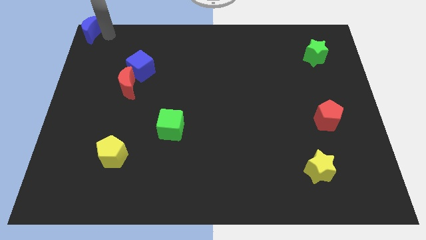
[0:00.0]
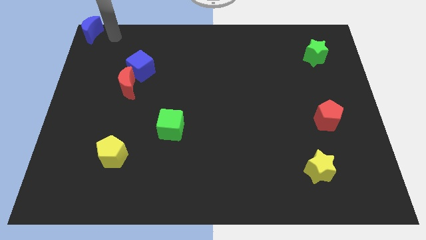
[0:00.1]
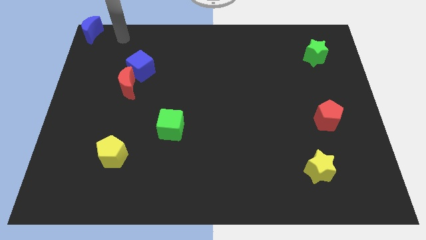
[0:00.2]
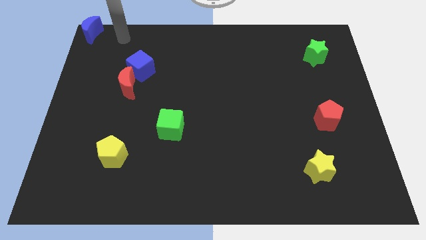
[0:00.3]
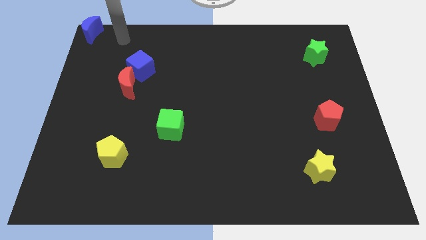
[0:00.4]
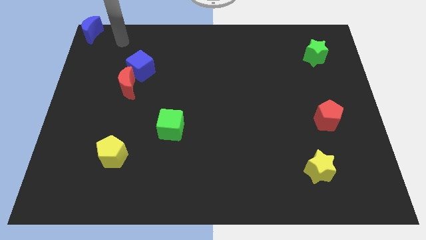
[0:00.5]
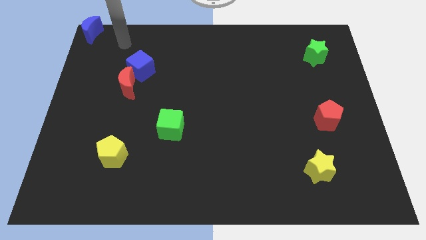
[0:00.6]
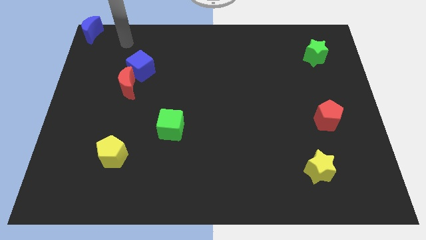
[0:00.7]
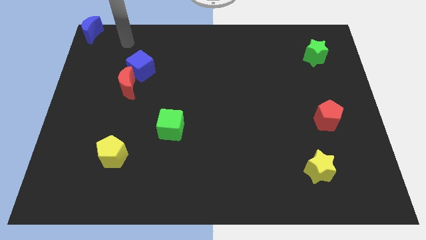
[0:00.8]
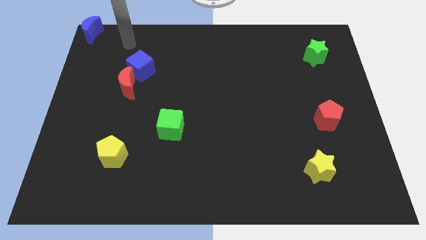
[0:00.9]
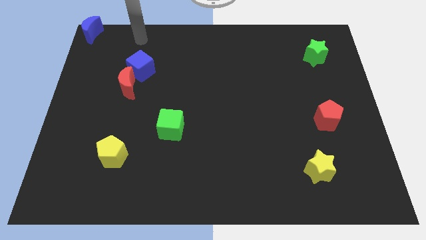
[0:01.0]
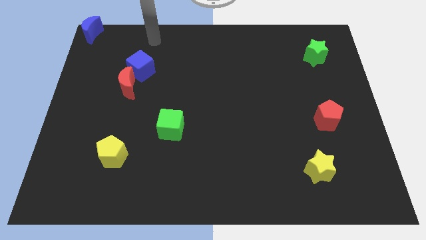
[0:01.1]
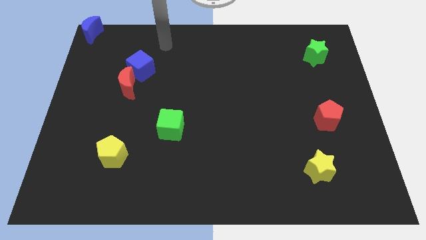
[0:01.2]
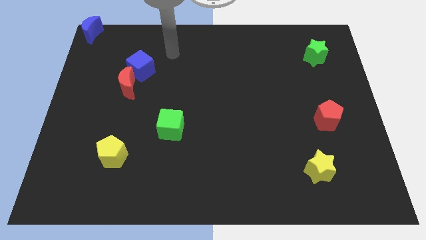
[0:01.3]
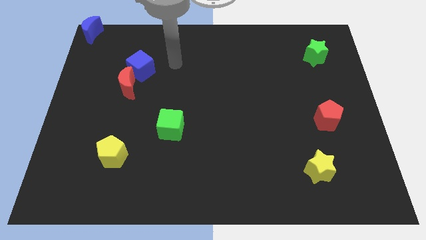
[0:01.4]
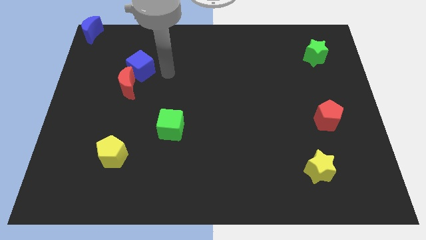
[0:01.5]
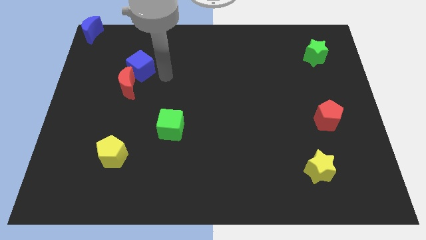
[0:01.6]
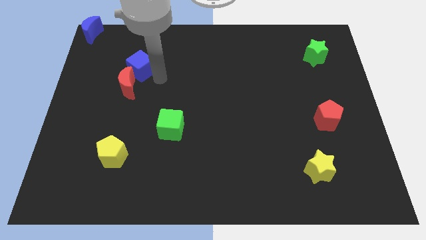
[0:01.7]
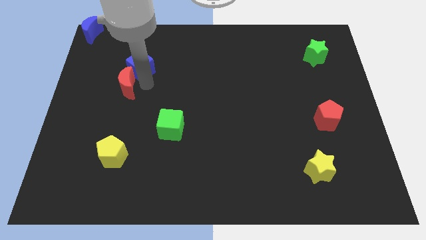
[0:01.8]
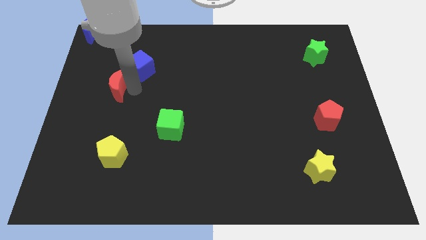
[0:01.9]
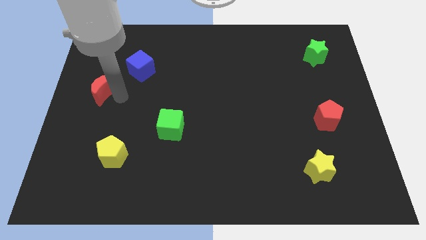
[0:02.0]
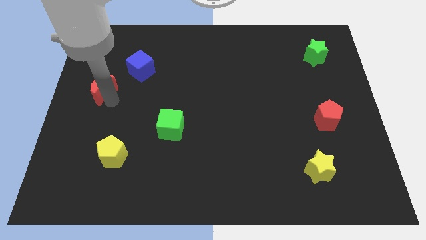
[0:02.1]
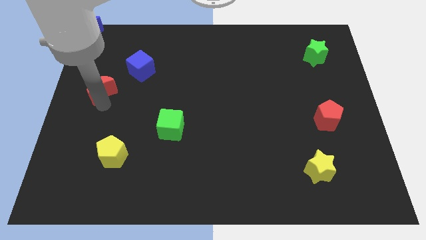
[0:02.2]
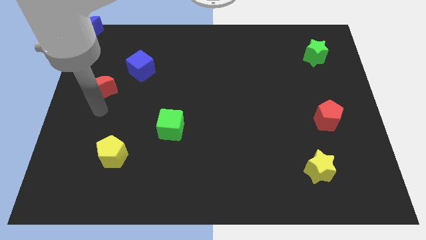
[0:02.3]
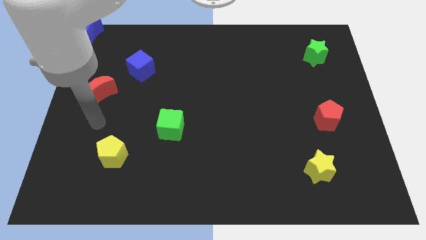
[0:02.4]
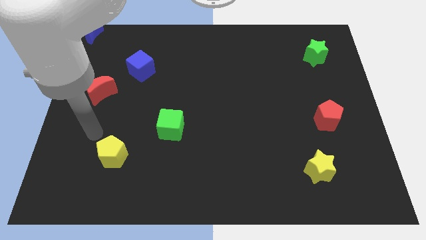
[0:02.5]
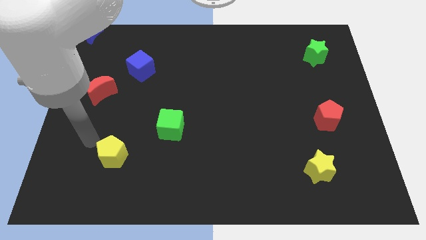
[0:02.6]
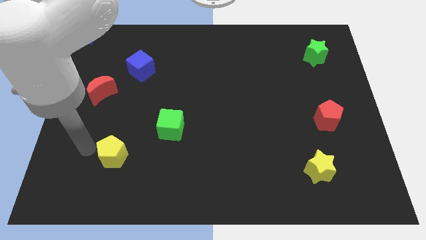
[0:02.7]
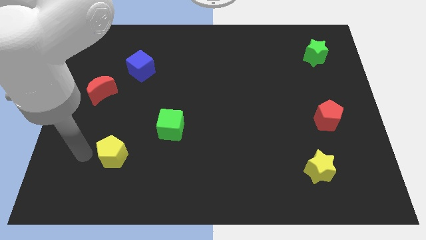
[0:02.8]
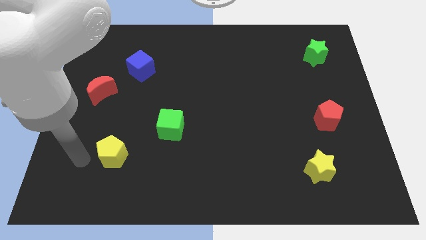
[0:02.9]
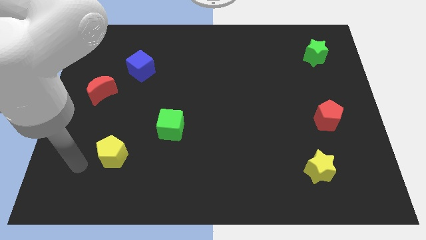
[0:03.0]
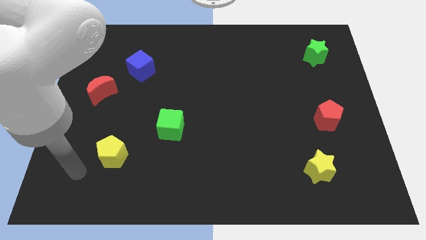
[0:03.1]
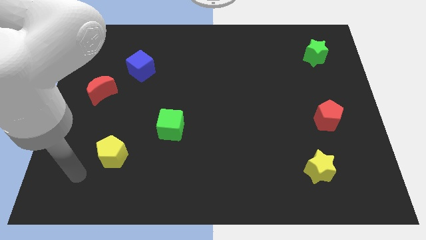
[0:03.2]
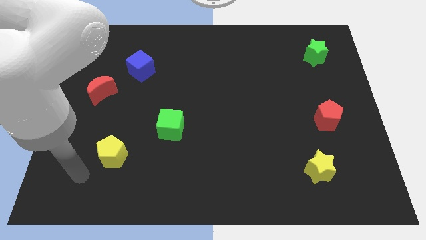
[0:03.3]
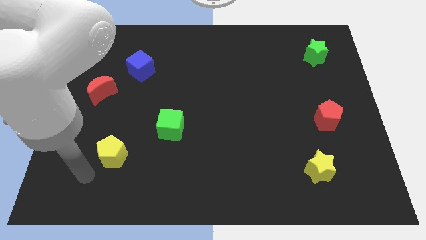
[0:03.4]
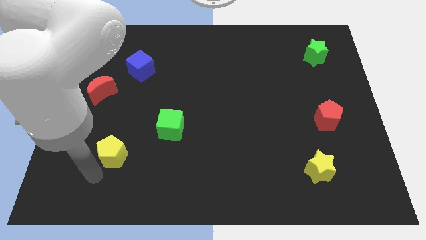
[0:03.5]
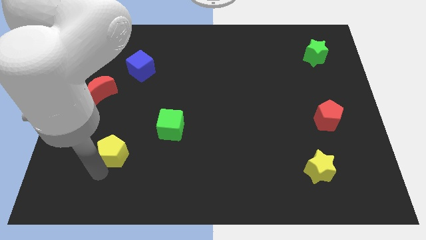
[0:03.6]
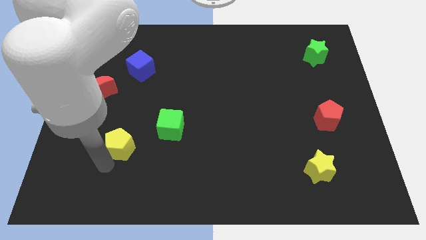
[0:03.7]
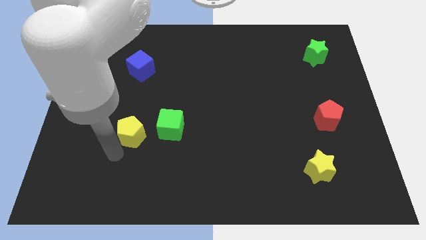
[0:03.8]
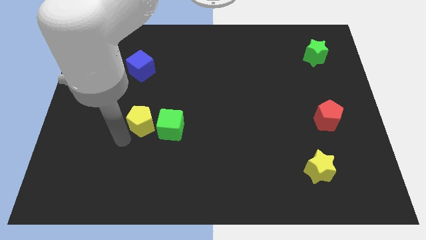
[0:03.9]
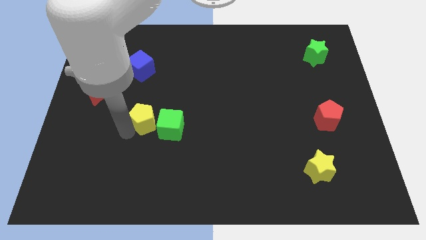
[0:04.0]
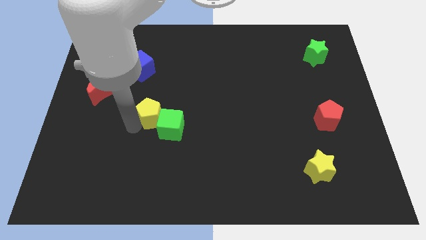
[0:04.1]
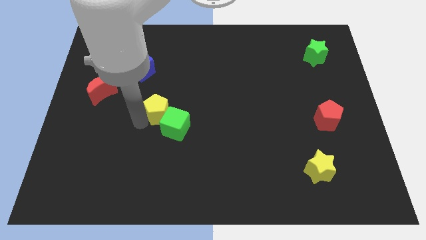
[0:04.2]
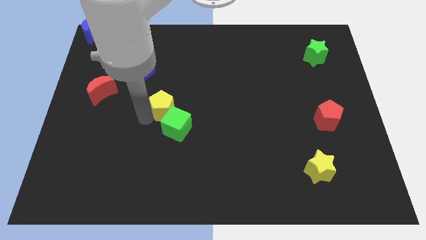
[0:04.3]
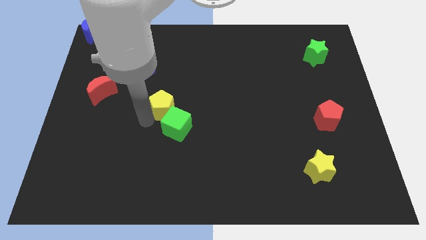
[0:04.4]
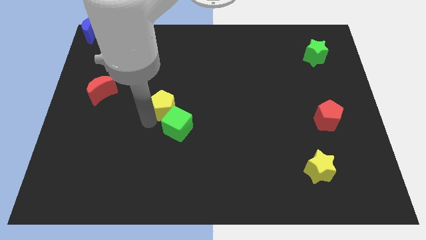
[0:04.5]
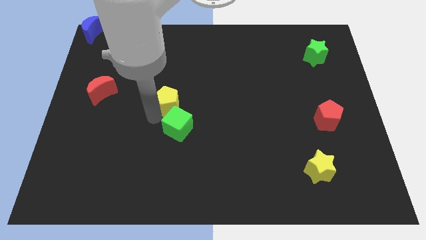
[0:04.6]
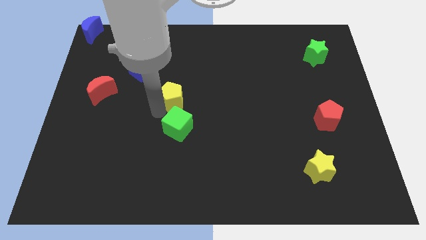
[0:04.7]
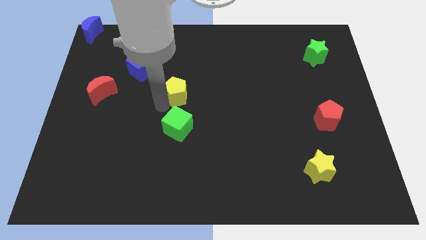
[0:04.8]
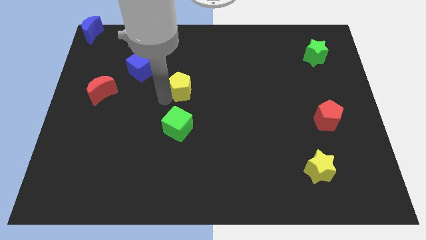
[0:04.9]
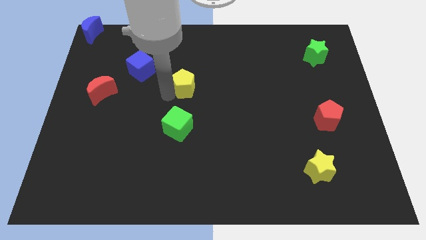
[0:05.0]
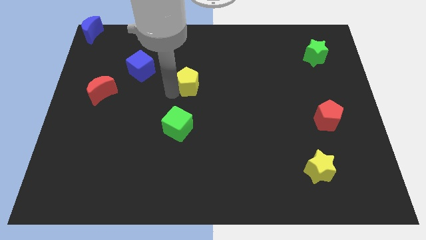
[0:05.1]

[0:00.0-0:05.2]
place the yellow pentagon above the green cube

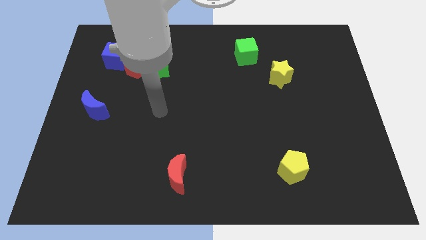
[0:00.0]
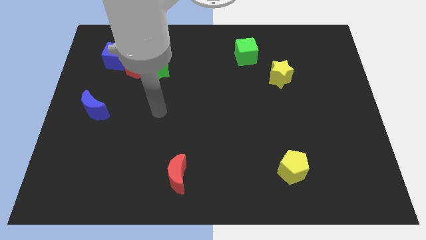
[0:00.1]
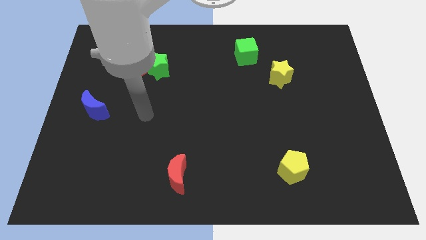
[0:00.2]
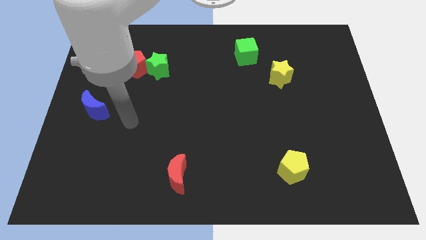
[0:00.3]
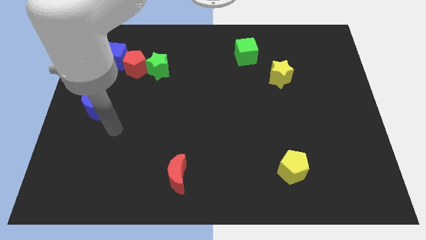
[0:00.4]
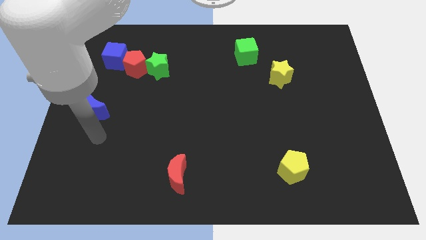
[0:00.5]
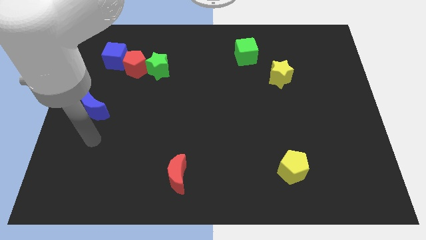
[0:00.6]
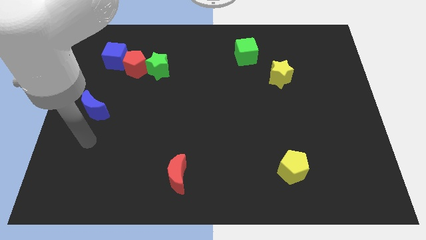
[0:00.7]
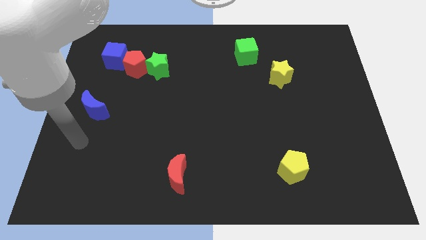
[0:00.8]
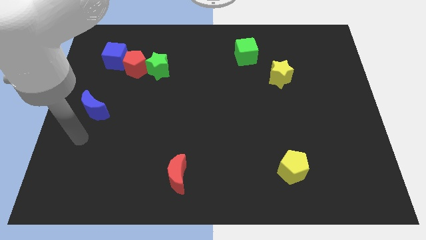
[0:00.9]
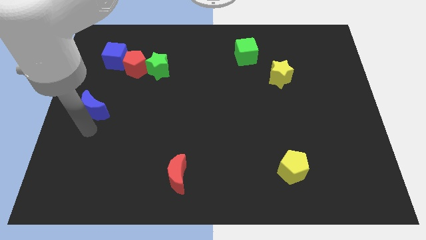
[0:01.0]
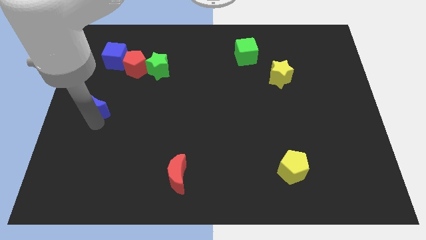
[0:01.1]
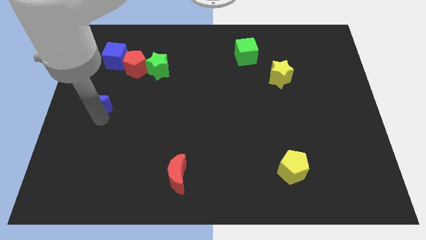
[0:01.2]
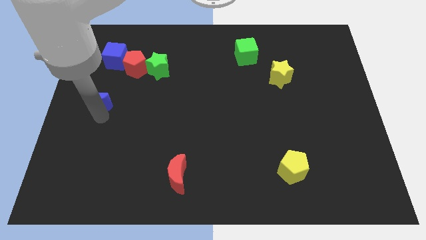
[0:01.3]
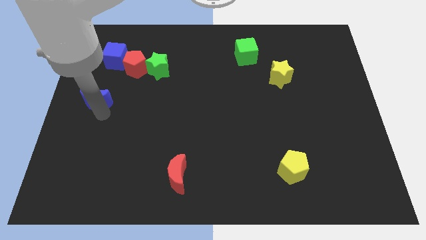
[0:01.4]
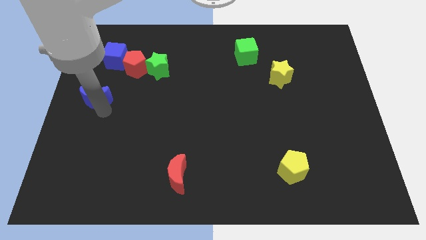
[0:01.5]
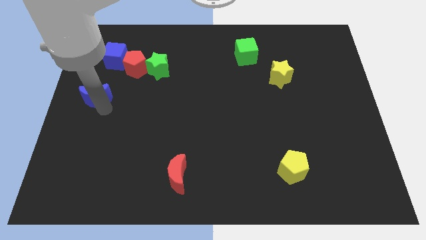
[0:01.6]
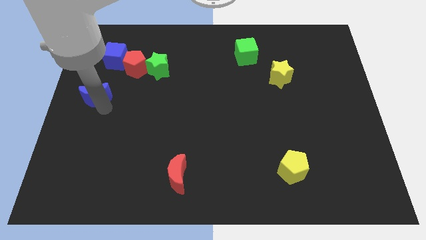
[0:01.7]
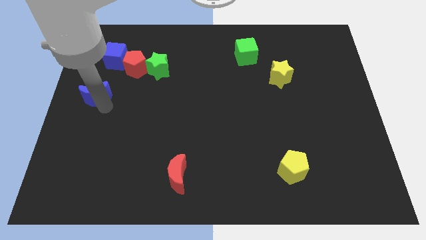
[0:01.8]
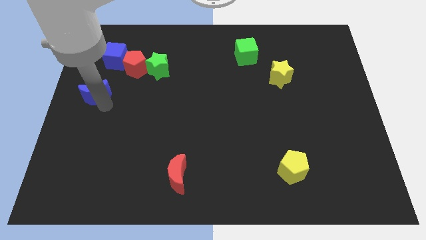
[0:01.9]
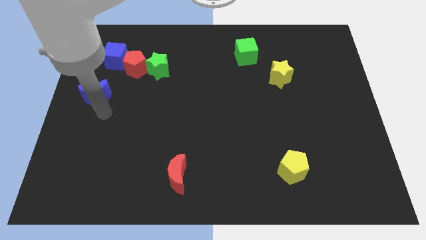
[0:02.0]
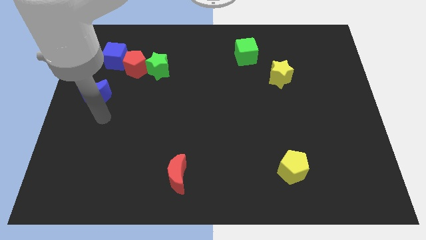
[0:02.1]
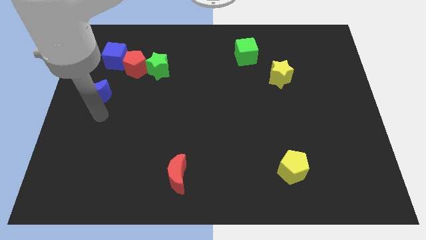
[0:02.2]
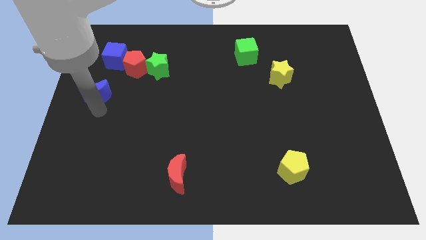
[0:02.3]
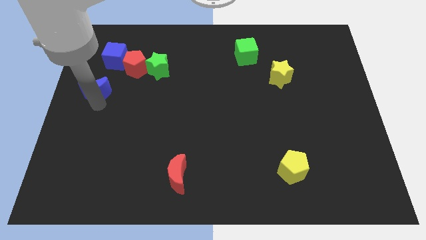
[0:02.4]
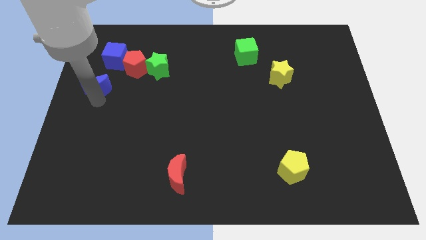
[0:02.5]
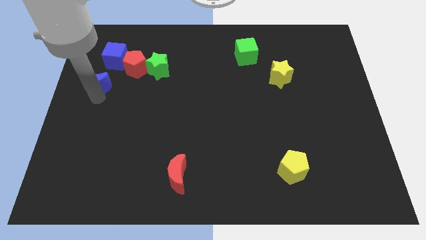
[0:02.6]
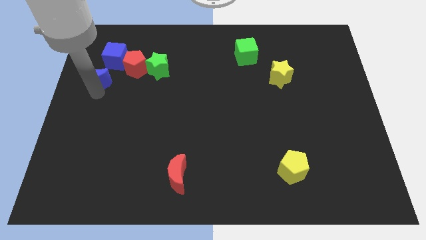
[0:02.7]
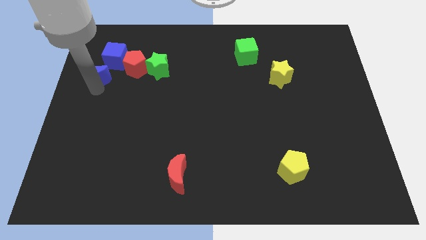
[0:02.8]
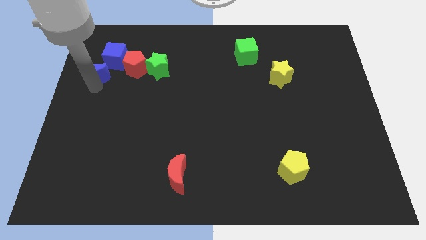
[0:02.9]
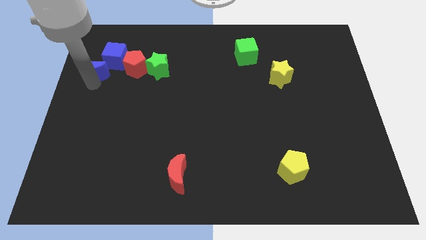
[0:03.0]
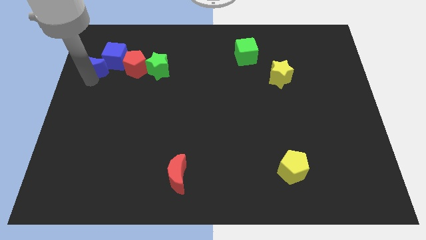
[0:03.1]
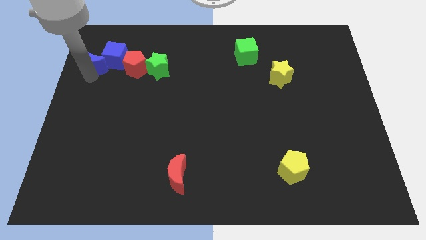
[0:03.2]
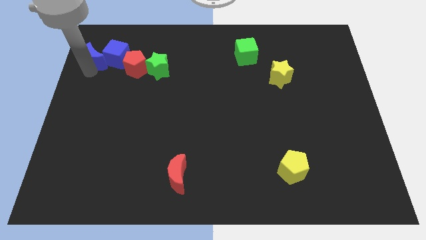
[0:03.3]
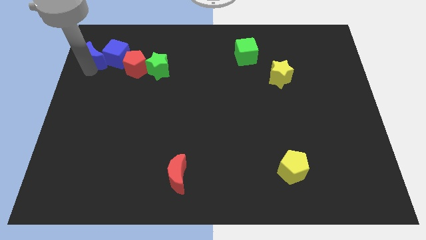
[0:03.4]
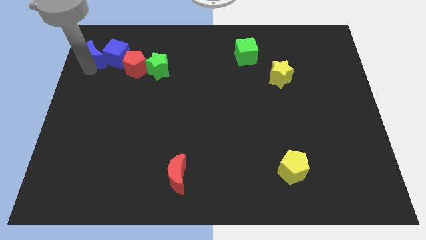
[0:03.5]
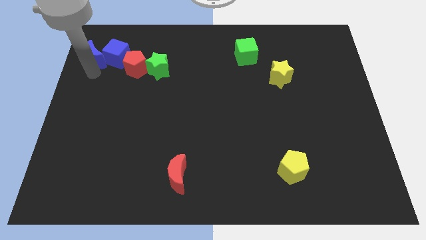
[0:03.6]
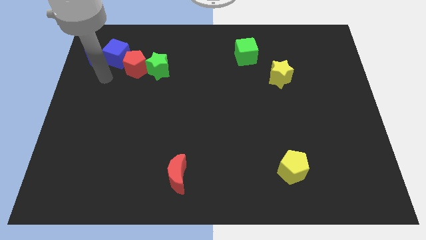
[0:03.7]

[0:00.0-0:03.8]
move the blue crescent to the left of the blue cube
